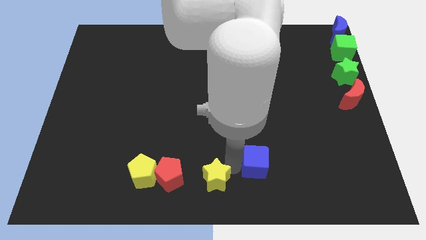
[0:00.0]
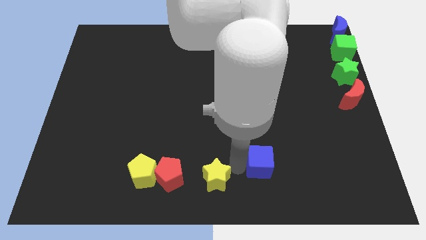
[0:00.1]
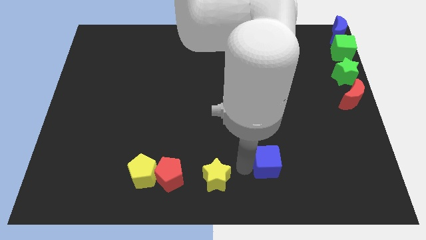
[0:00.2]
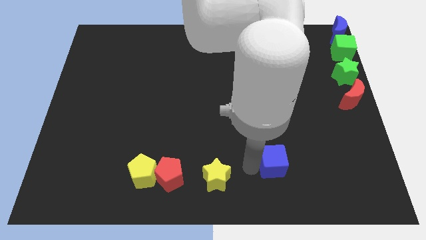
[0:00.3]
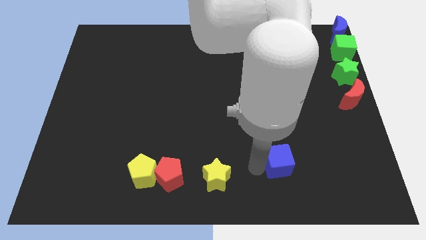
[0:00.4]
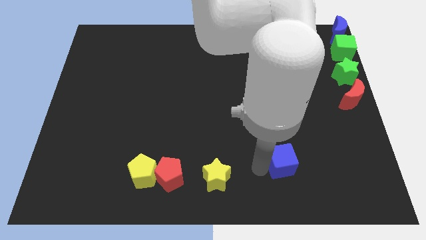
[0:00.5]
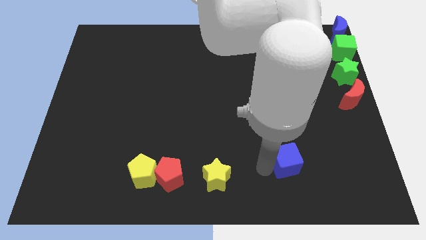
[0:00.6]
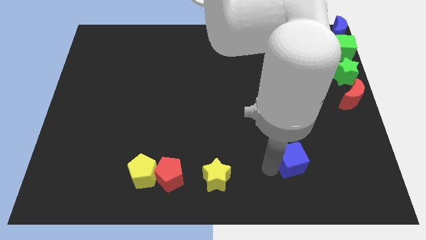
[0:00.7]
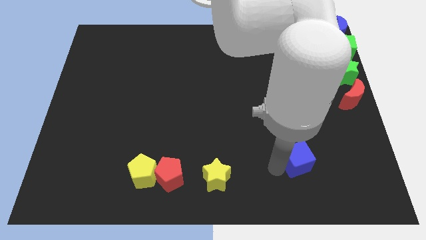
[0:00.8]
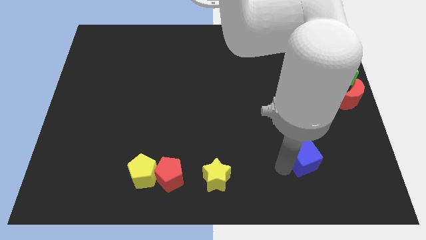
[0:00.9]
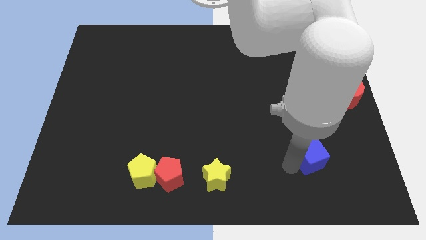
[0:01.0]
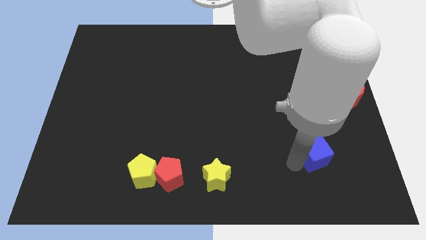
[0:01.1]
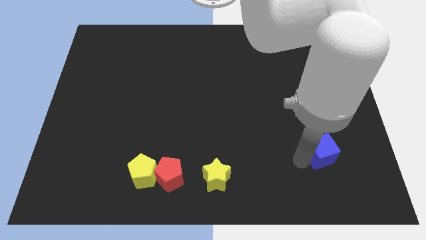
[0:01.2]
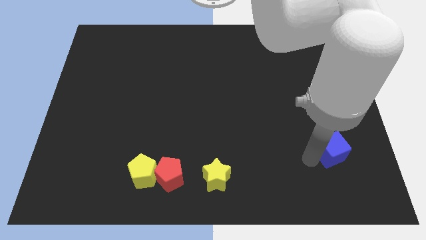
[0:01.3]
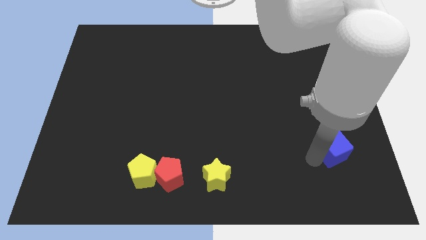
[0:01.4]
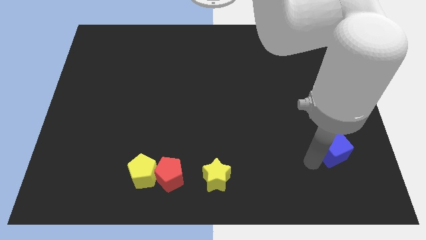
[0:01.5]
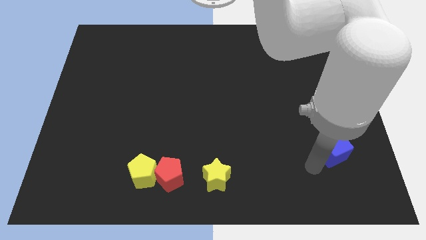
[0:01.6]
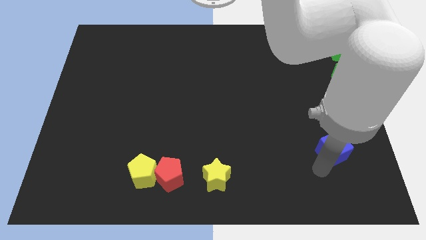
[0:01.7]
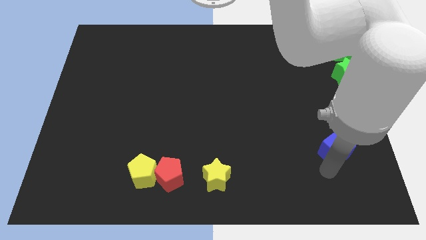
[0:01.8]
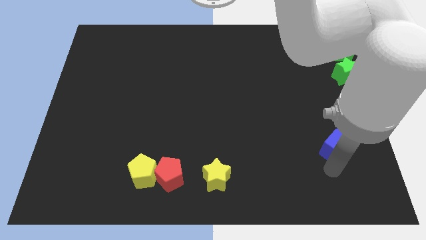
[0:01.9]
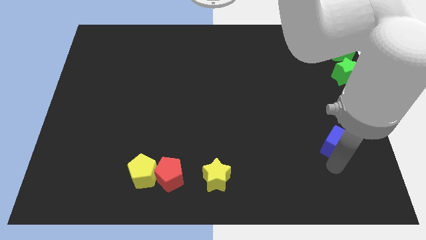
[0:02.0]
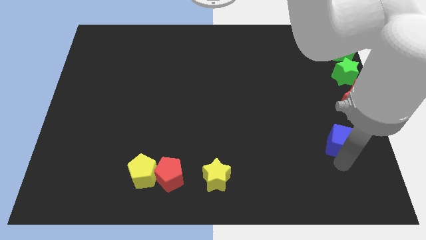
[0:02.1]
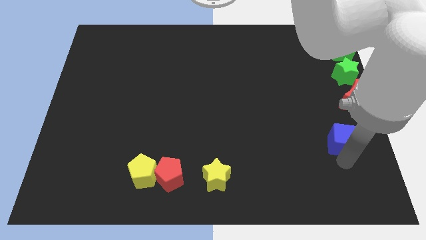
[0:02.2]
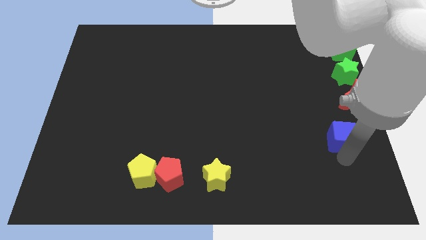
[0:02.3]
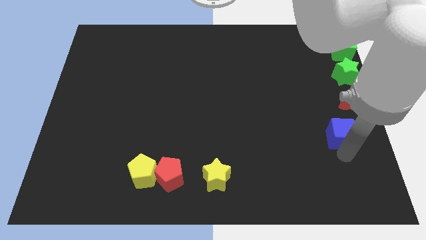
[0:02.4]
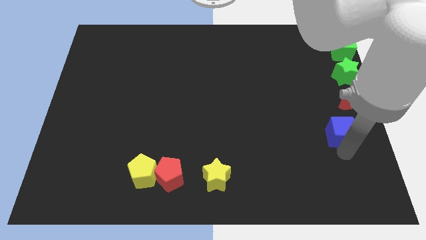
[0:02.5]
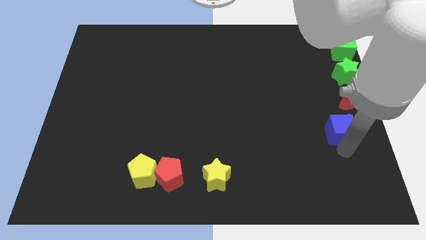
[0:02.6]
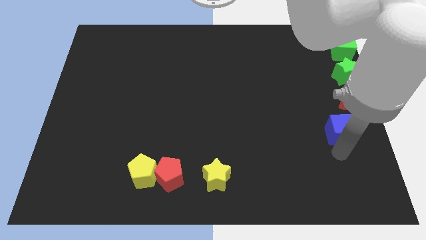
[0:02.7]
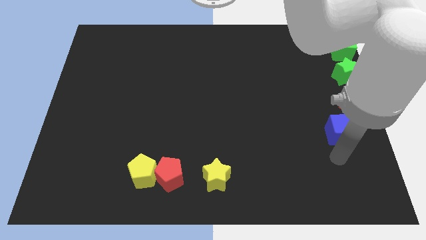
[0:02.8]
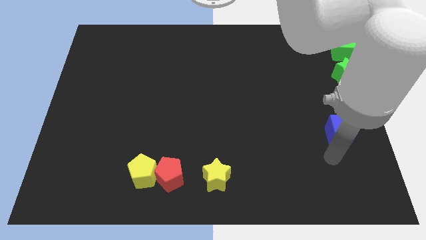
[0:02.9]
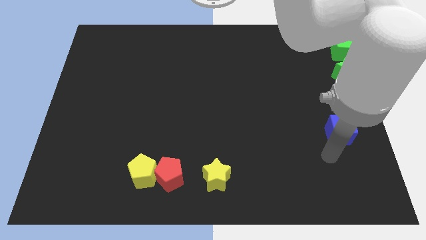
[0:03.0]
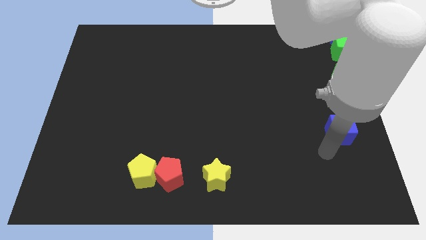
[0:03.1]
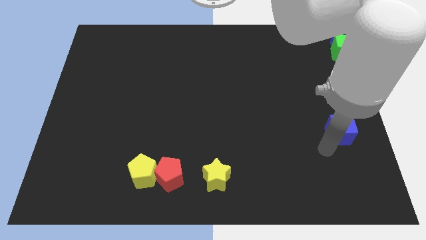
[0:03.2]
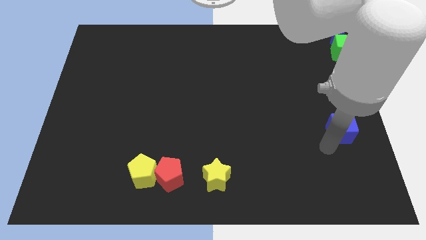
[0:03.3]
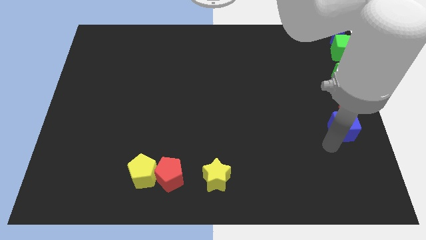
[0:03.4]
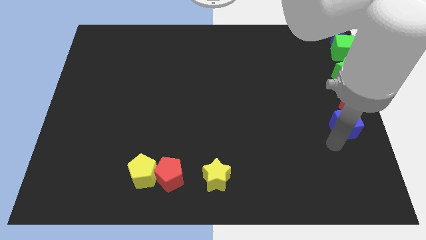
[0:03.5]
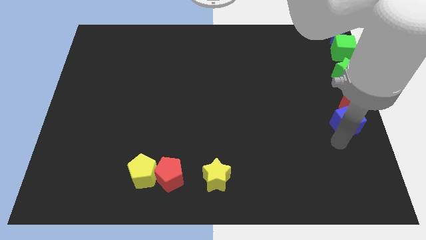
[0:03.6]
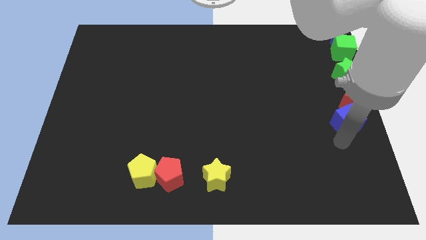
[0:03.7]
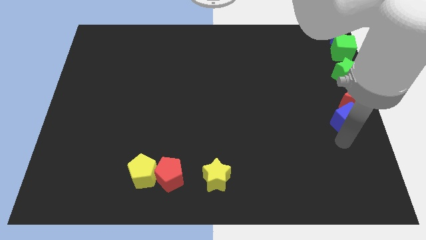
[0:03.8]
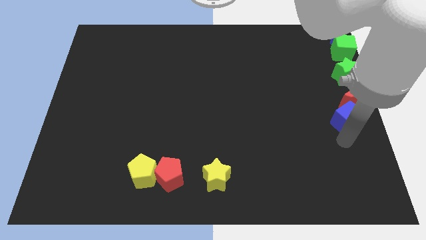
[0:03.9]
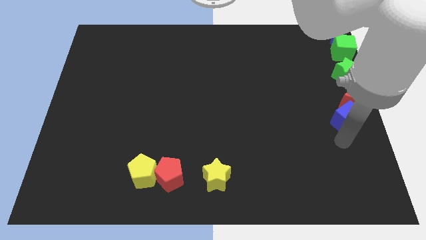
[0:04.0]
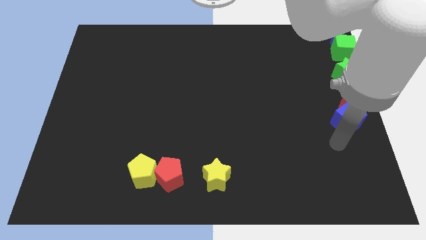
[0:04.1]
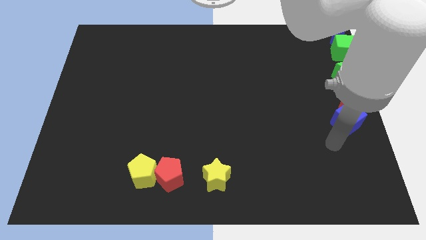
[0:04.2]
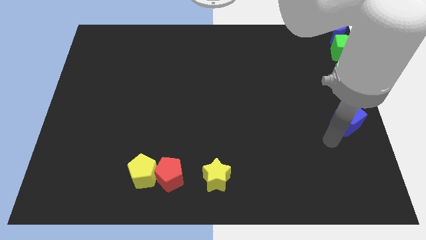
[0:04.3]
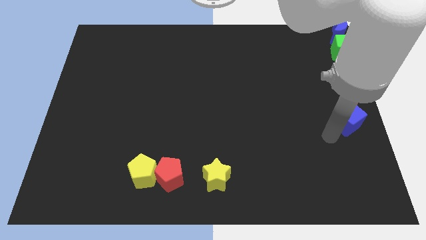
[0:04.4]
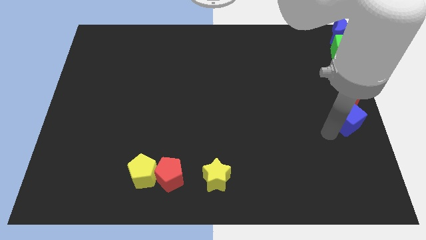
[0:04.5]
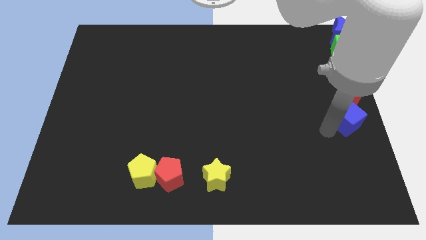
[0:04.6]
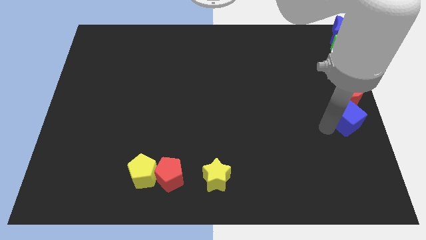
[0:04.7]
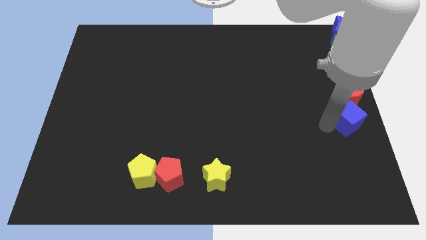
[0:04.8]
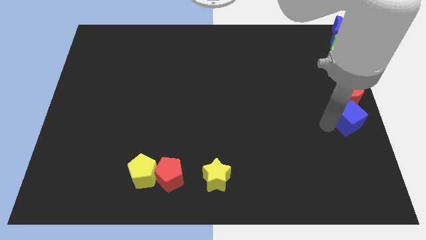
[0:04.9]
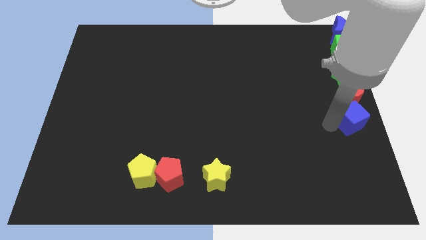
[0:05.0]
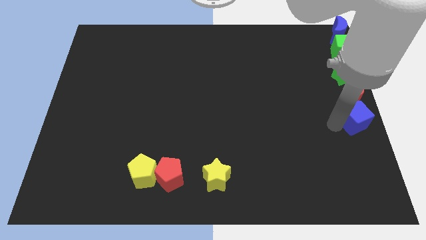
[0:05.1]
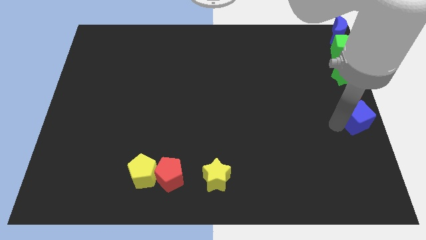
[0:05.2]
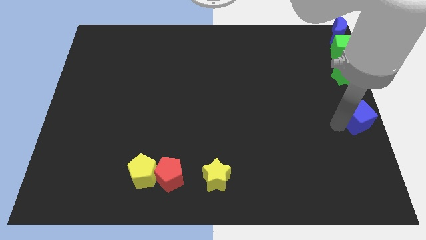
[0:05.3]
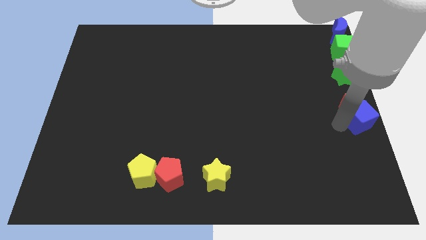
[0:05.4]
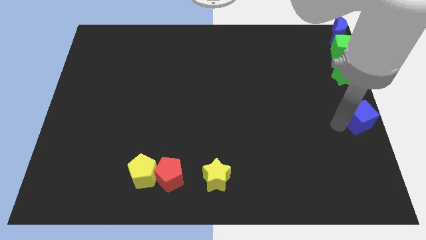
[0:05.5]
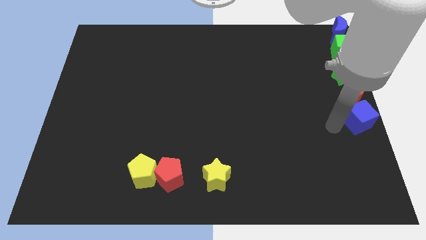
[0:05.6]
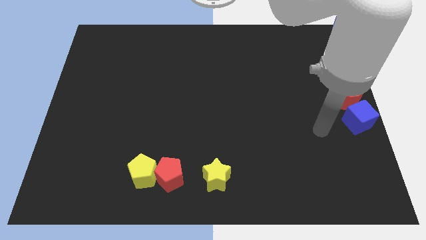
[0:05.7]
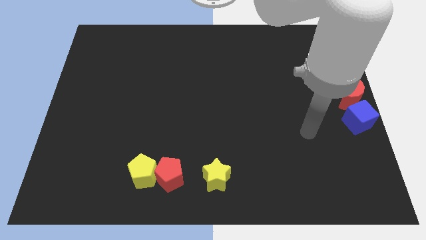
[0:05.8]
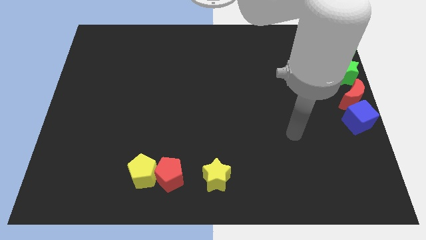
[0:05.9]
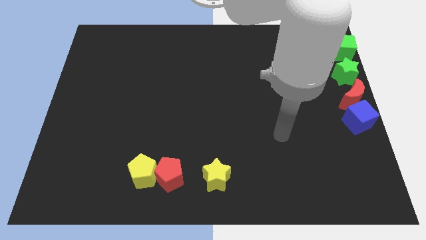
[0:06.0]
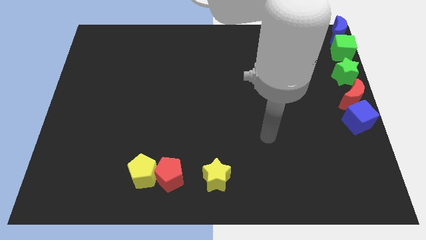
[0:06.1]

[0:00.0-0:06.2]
place the blue cube to the bottom side of the red moon

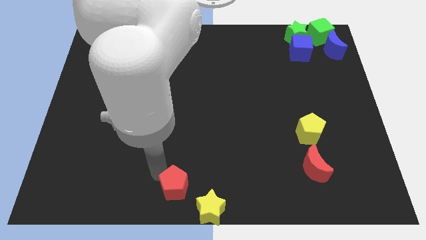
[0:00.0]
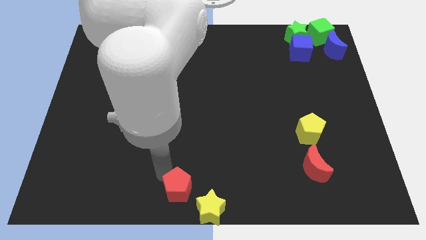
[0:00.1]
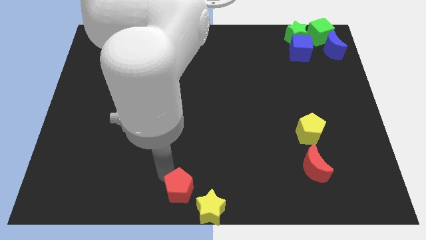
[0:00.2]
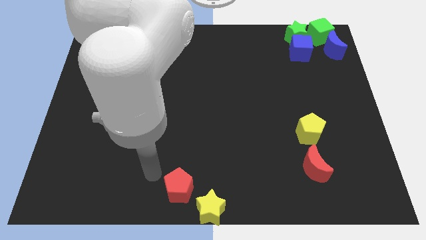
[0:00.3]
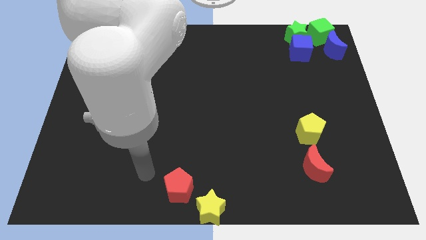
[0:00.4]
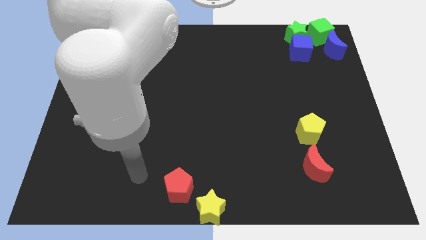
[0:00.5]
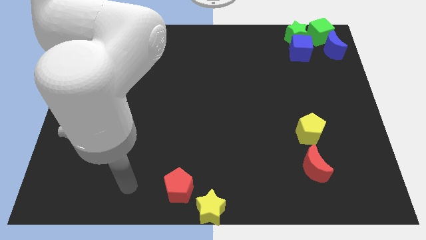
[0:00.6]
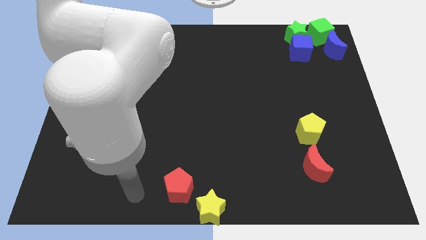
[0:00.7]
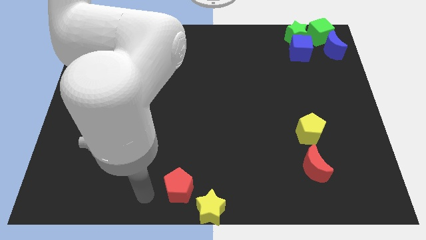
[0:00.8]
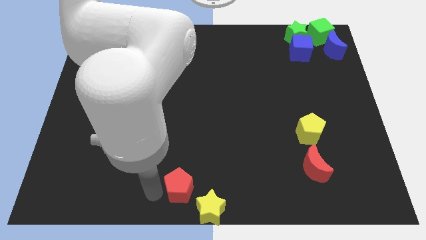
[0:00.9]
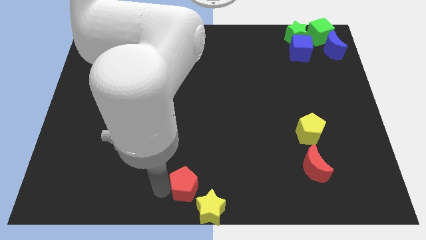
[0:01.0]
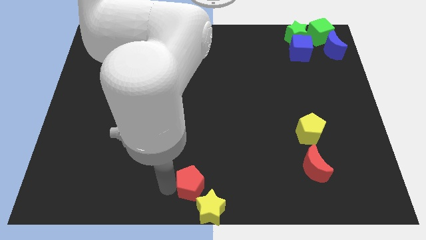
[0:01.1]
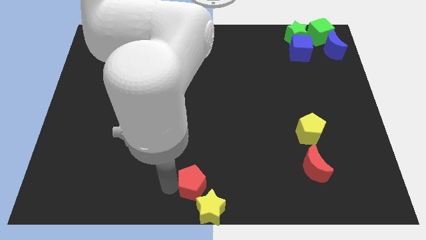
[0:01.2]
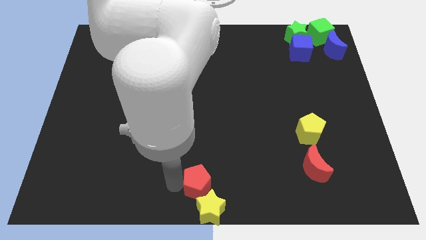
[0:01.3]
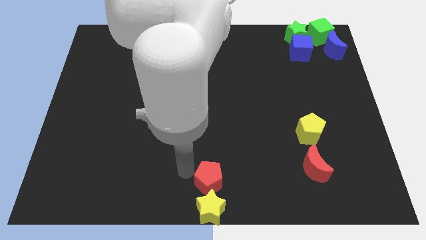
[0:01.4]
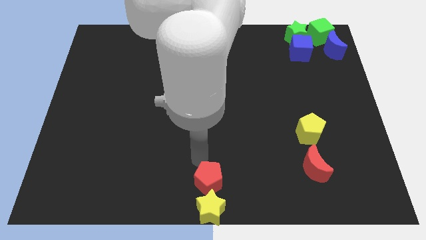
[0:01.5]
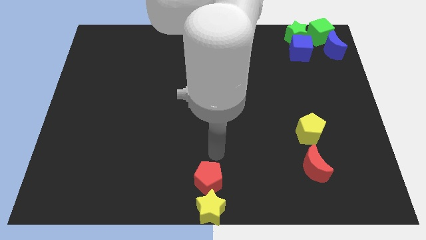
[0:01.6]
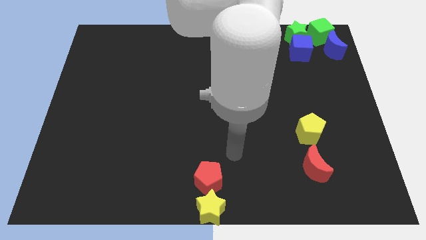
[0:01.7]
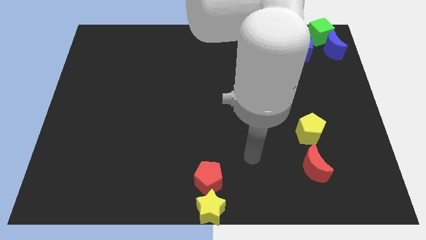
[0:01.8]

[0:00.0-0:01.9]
place red pentagon above yellow star

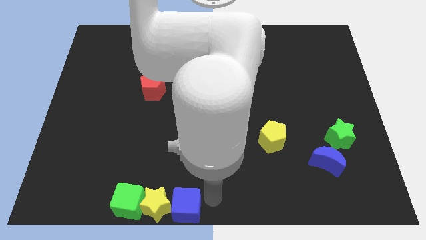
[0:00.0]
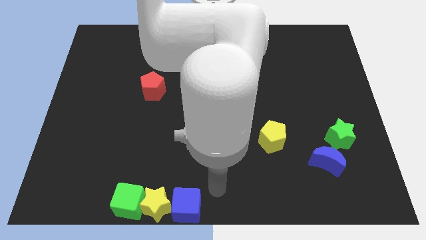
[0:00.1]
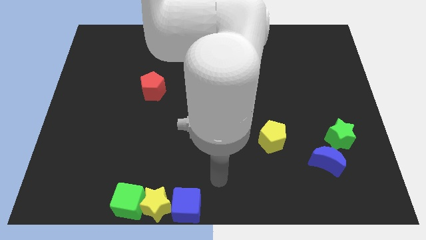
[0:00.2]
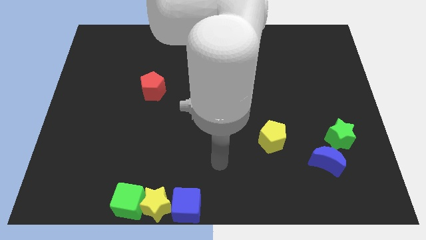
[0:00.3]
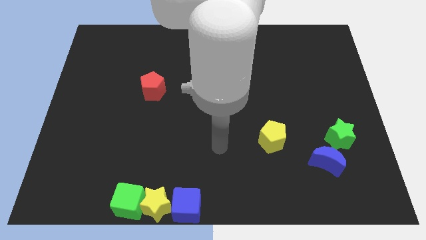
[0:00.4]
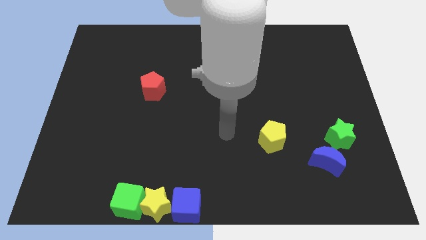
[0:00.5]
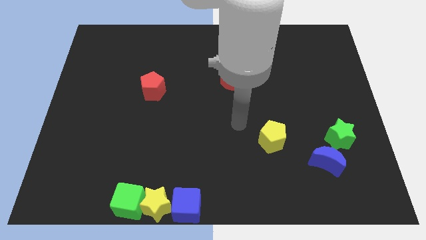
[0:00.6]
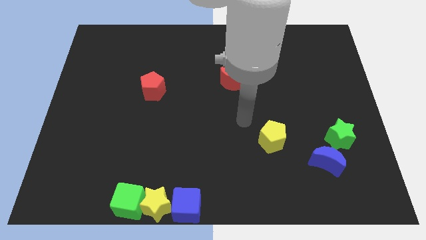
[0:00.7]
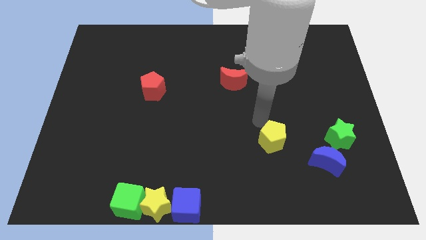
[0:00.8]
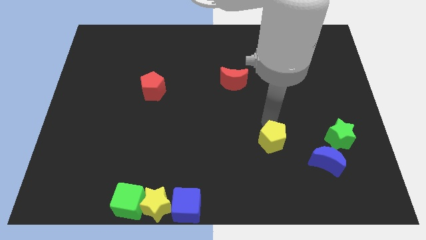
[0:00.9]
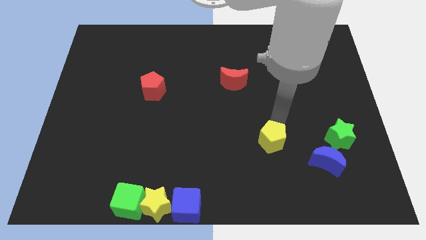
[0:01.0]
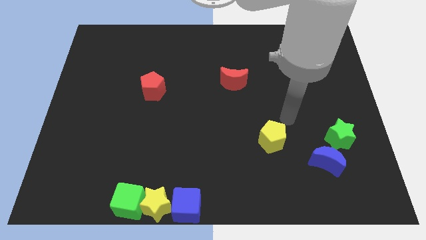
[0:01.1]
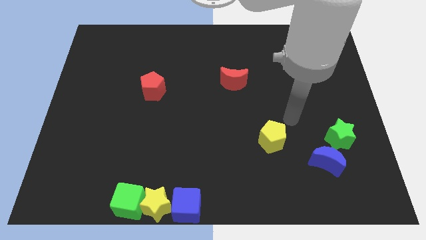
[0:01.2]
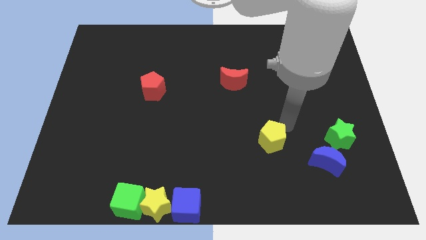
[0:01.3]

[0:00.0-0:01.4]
move the arm away from the blue cube
